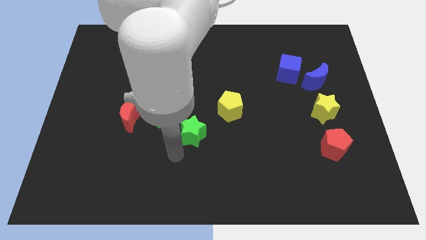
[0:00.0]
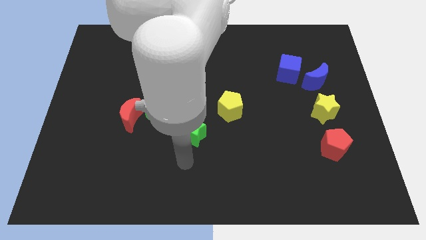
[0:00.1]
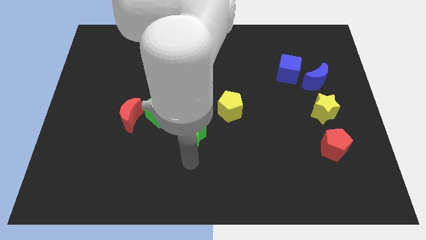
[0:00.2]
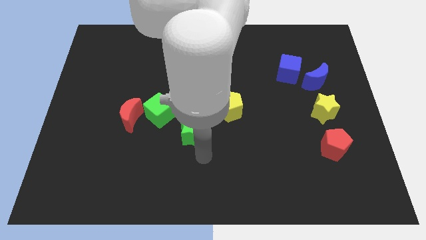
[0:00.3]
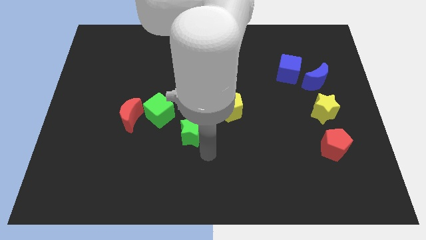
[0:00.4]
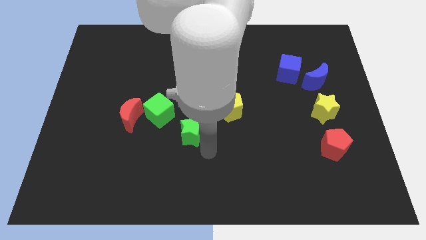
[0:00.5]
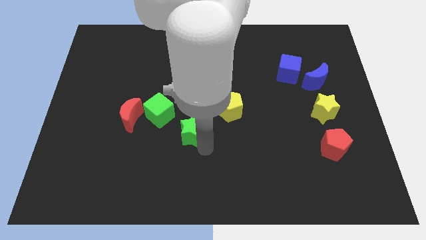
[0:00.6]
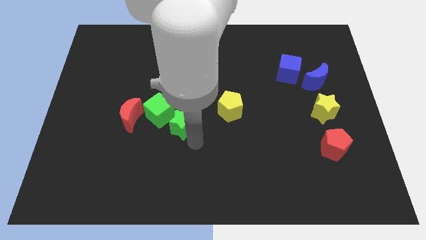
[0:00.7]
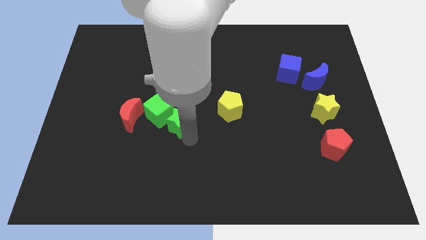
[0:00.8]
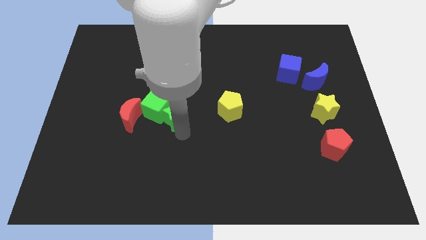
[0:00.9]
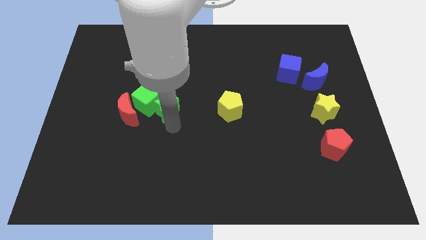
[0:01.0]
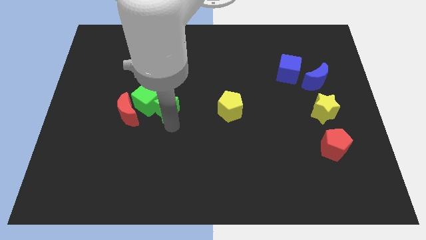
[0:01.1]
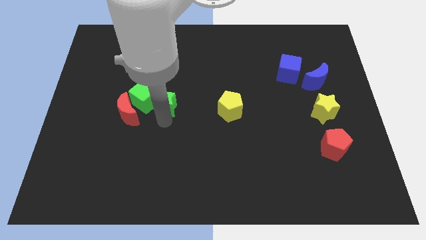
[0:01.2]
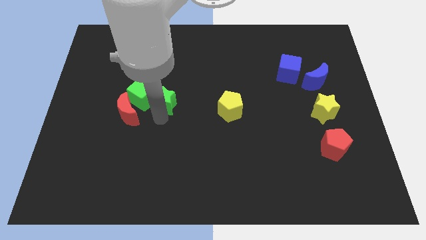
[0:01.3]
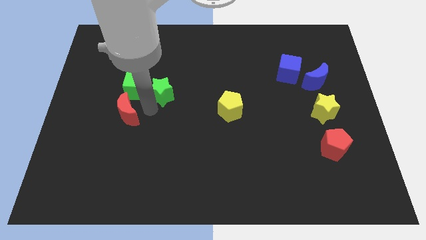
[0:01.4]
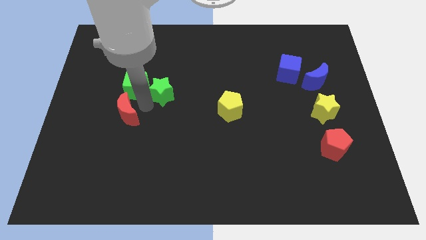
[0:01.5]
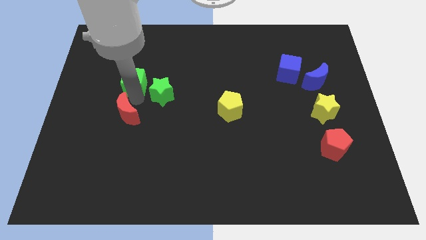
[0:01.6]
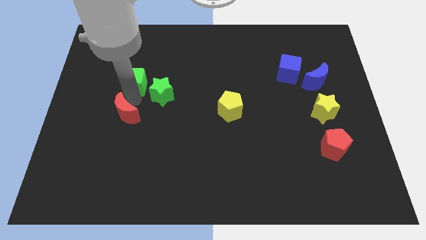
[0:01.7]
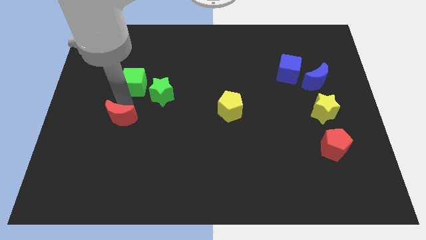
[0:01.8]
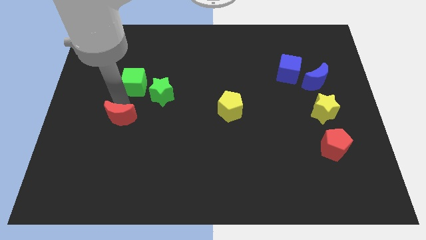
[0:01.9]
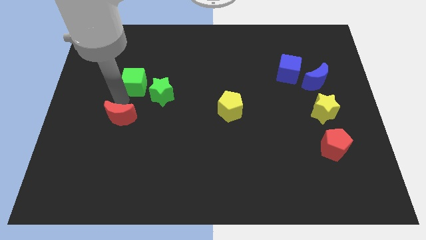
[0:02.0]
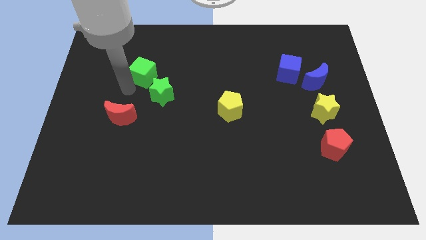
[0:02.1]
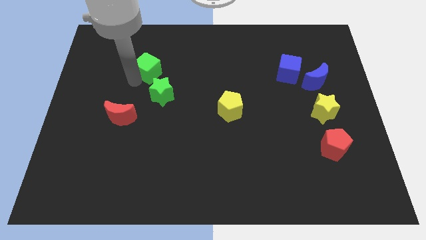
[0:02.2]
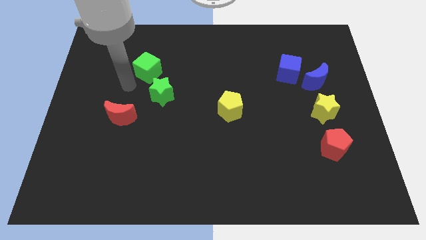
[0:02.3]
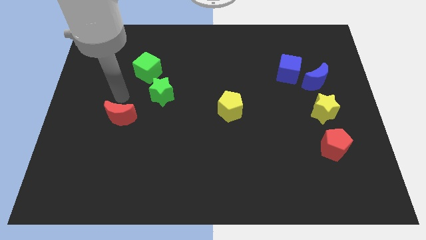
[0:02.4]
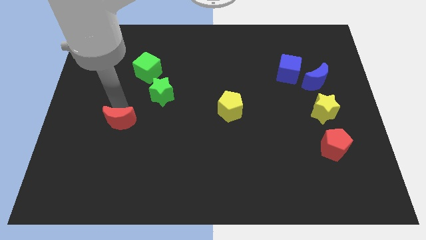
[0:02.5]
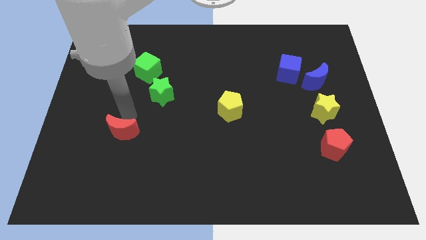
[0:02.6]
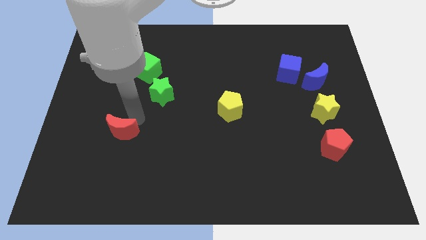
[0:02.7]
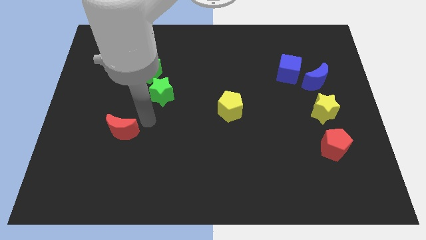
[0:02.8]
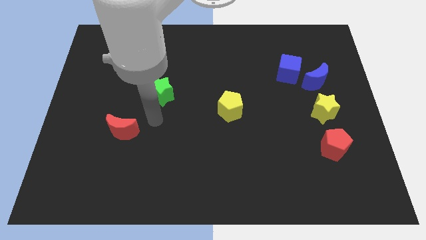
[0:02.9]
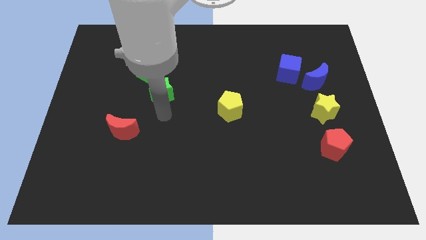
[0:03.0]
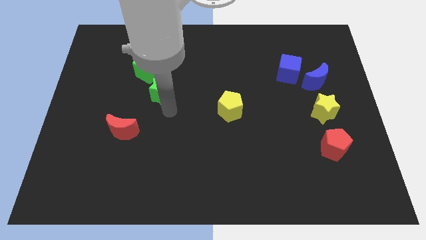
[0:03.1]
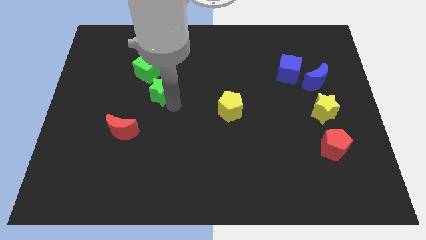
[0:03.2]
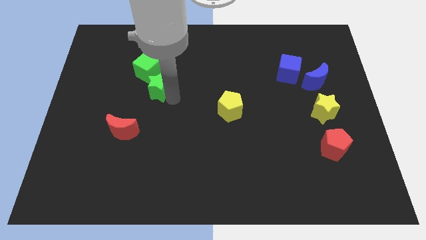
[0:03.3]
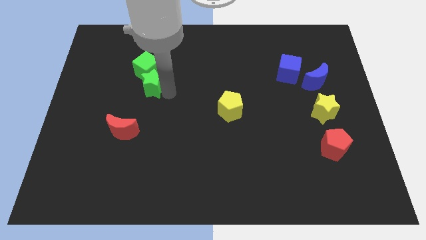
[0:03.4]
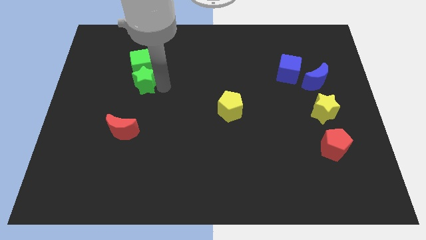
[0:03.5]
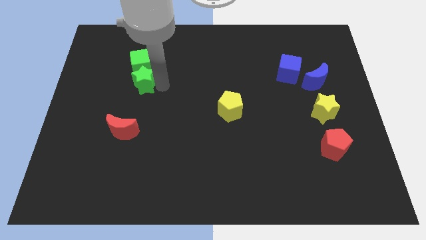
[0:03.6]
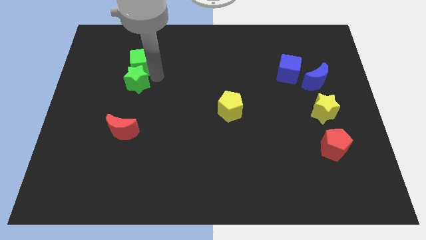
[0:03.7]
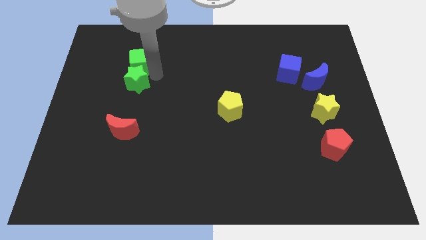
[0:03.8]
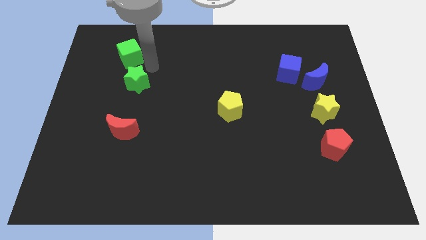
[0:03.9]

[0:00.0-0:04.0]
move the green blocks to the top of the red crescent

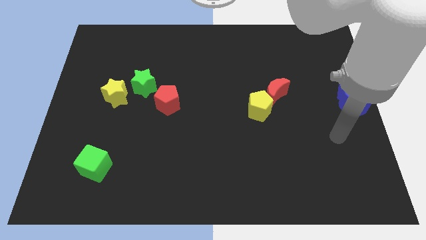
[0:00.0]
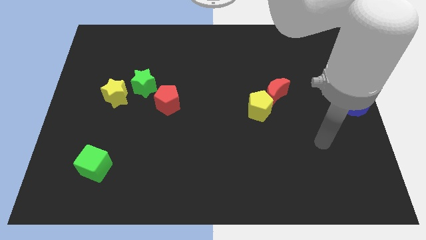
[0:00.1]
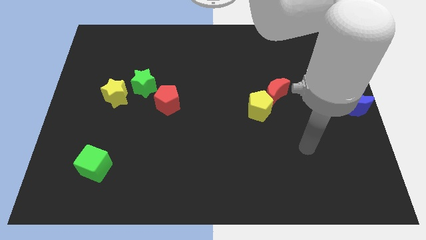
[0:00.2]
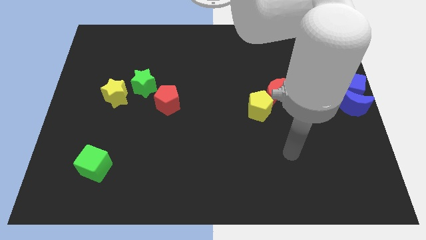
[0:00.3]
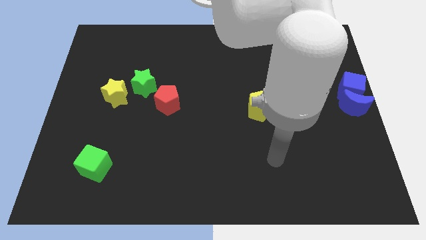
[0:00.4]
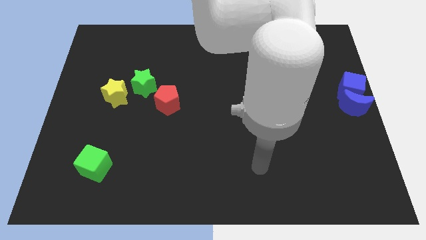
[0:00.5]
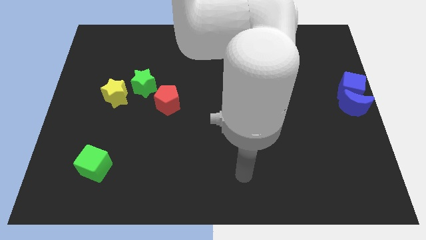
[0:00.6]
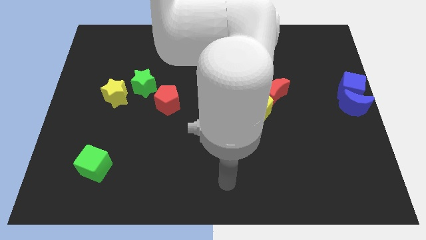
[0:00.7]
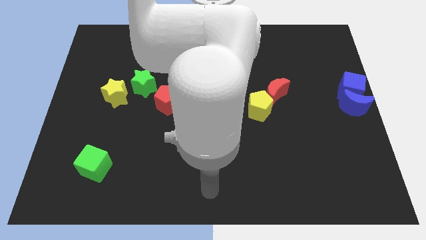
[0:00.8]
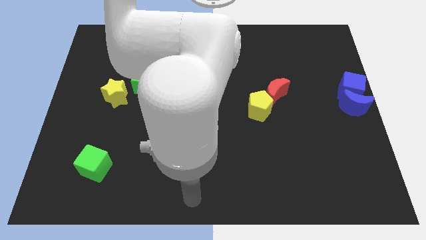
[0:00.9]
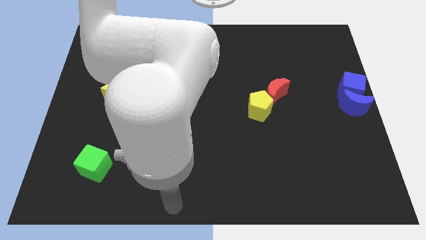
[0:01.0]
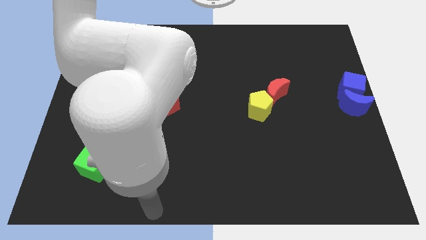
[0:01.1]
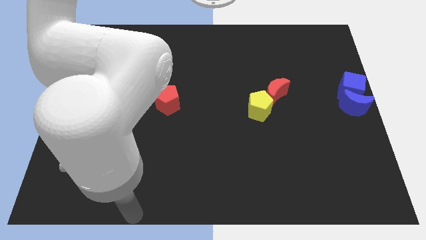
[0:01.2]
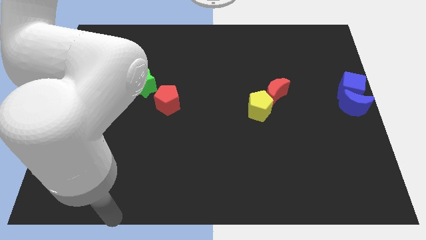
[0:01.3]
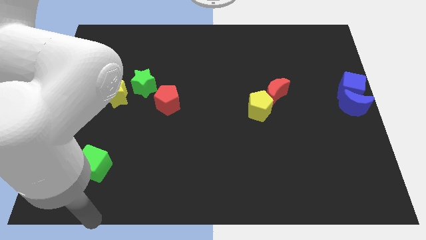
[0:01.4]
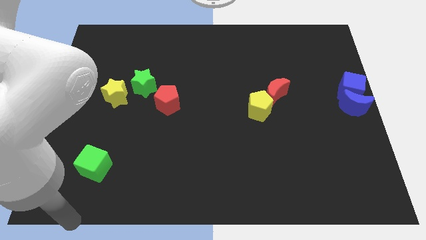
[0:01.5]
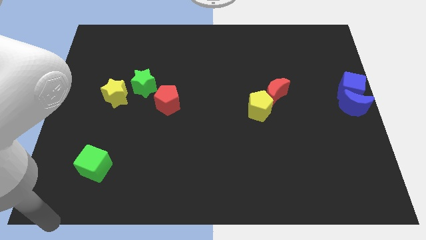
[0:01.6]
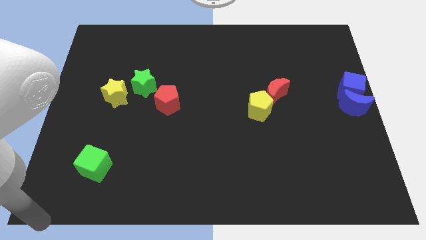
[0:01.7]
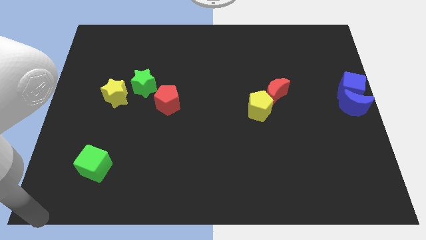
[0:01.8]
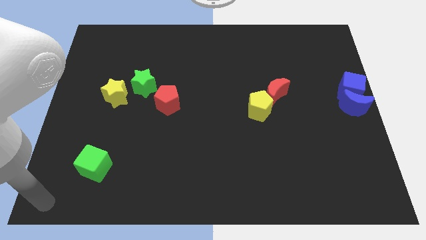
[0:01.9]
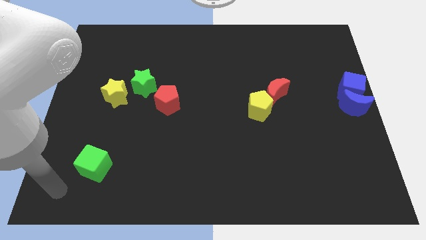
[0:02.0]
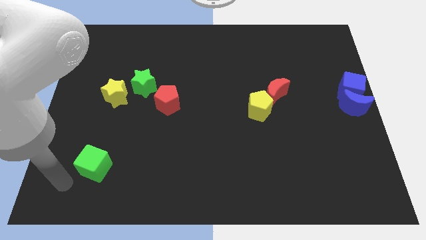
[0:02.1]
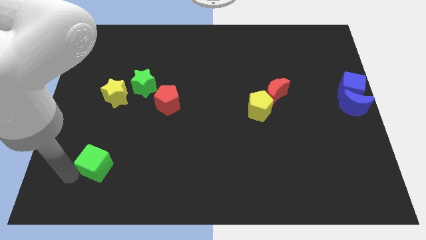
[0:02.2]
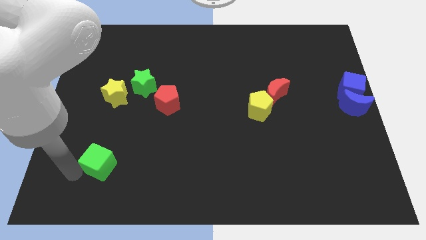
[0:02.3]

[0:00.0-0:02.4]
move your arm to the left of the green cube

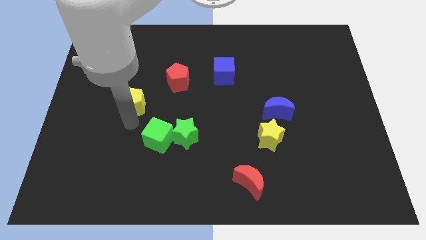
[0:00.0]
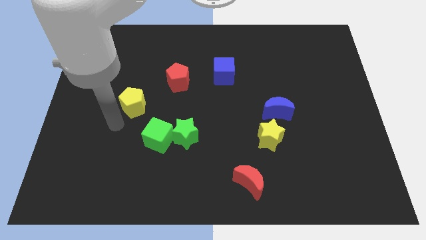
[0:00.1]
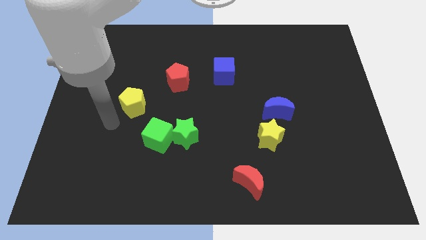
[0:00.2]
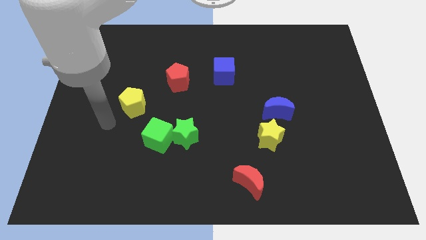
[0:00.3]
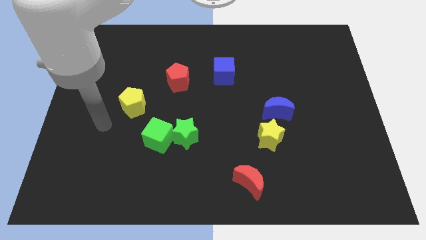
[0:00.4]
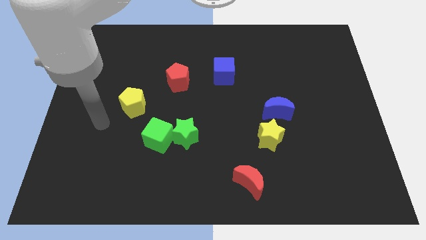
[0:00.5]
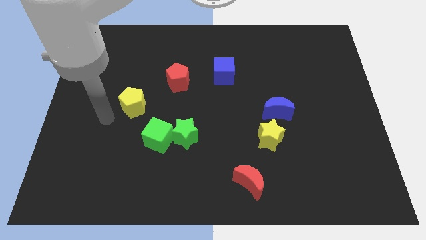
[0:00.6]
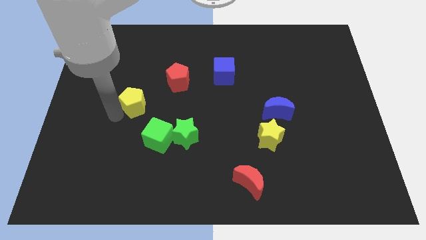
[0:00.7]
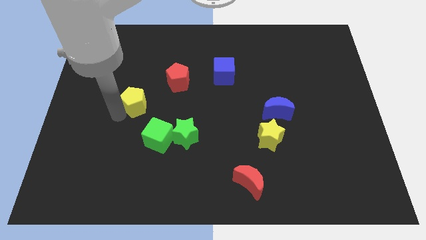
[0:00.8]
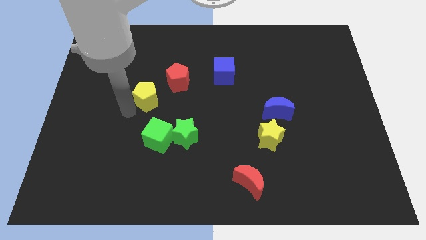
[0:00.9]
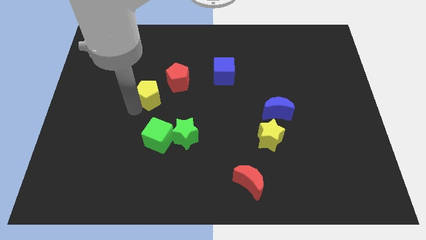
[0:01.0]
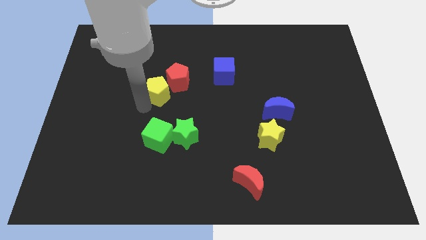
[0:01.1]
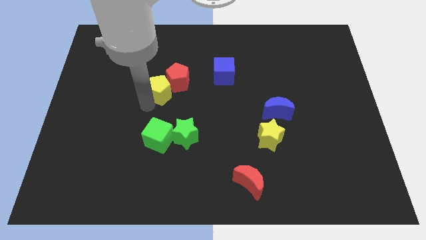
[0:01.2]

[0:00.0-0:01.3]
place the yellow pentagon to the left of the red pentagon

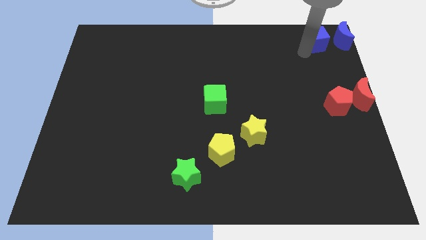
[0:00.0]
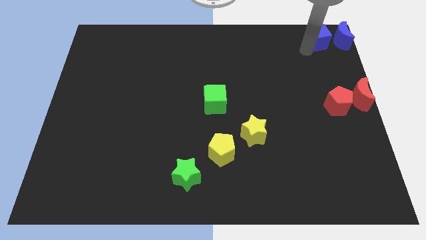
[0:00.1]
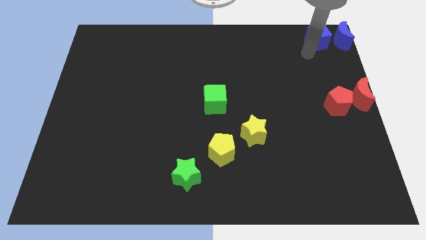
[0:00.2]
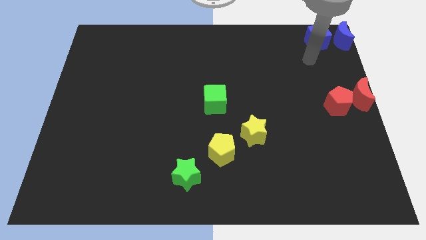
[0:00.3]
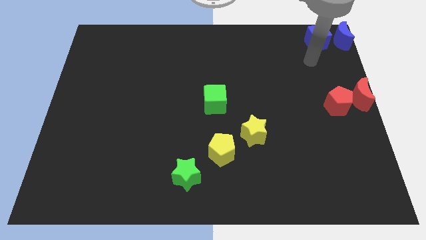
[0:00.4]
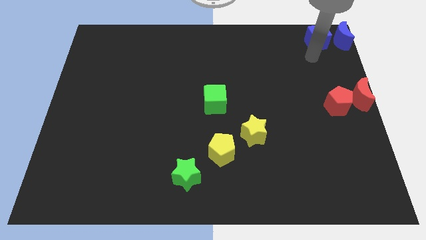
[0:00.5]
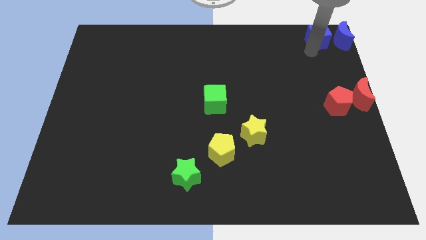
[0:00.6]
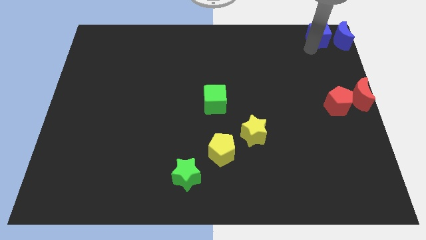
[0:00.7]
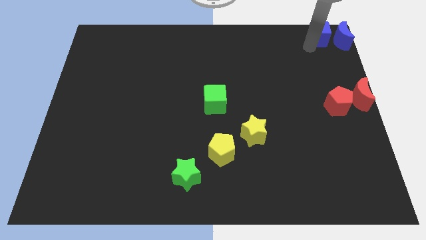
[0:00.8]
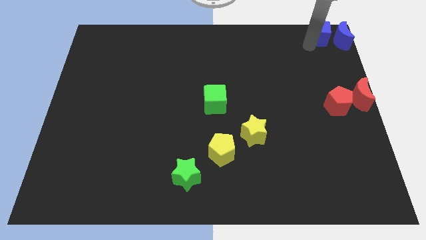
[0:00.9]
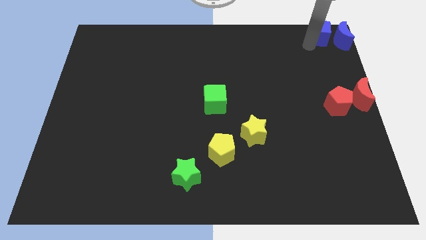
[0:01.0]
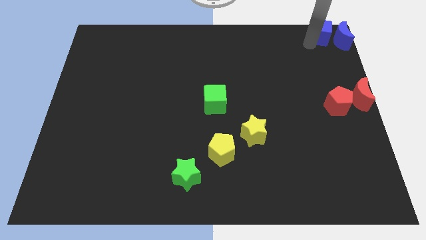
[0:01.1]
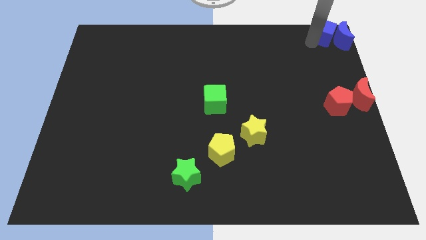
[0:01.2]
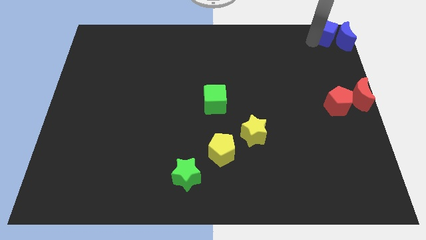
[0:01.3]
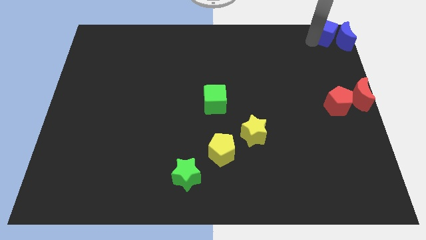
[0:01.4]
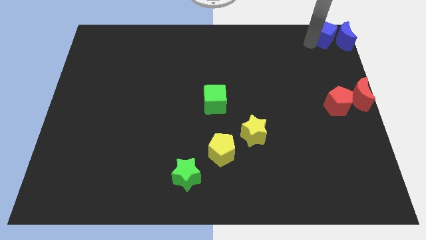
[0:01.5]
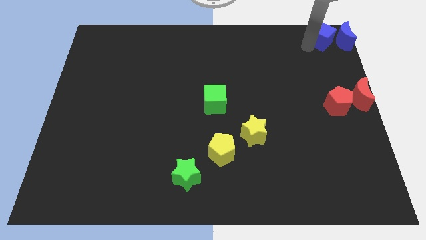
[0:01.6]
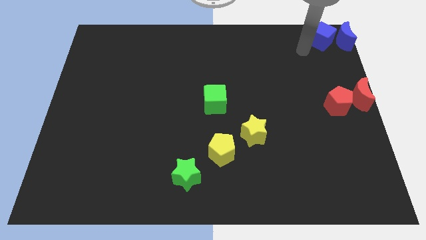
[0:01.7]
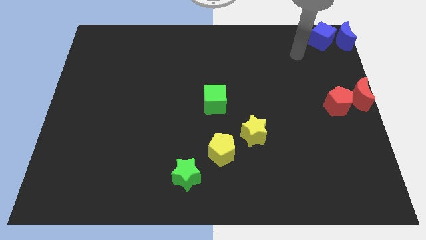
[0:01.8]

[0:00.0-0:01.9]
place the blue cube beside the blue crescent
